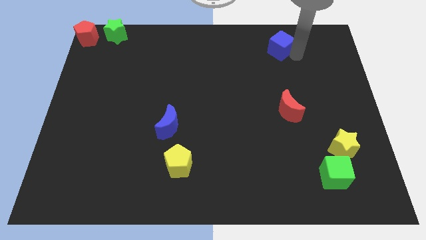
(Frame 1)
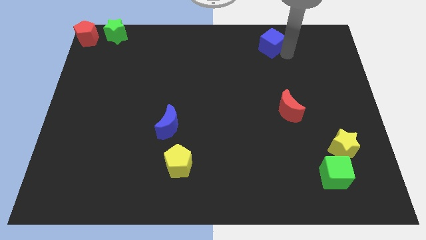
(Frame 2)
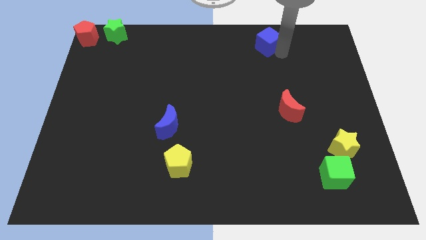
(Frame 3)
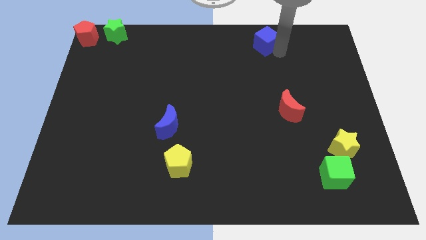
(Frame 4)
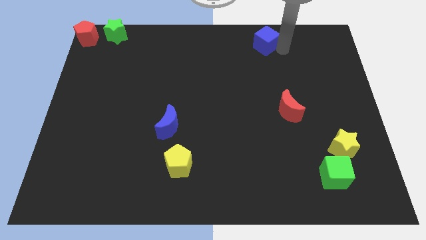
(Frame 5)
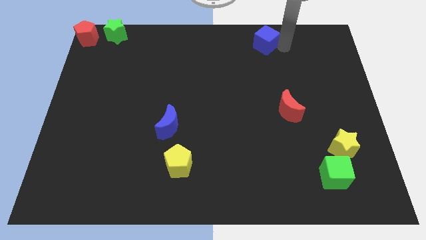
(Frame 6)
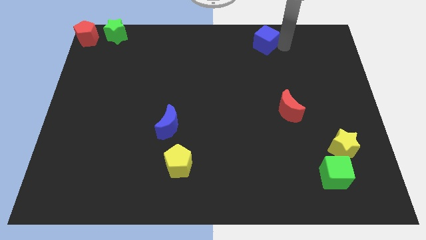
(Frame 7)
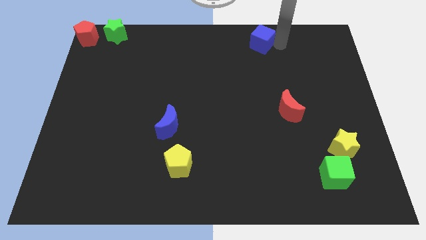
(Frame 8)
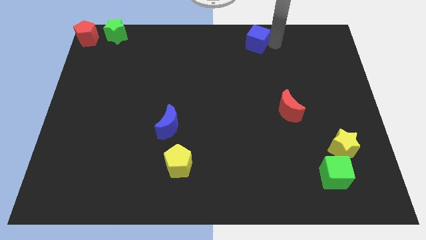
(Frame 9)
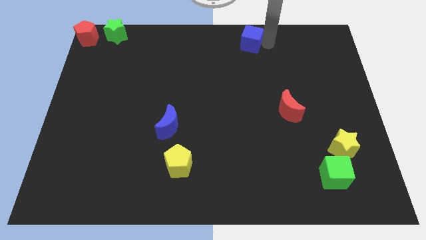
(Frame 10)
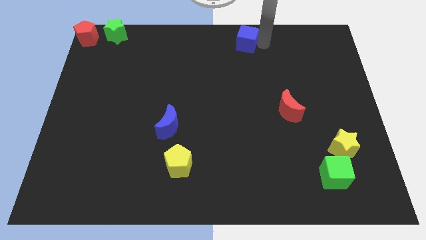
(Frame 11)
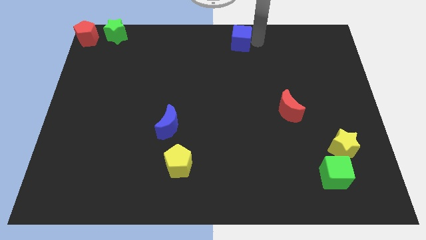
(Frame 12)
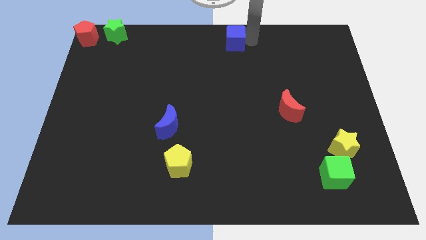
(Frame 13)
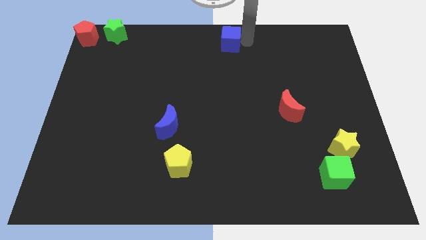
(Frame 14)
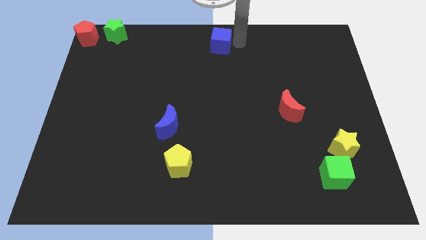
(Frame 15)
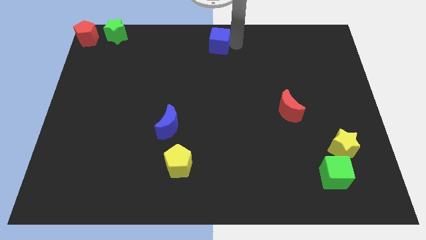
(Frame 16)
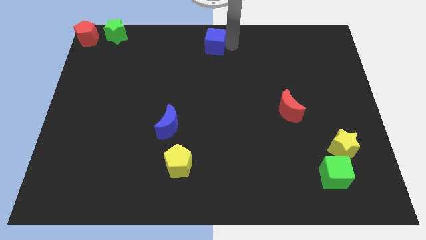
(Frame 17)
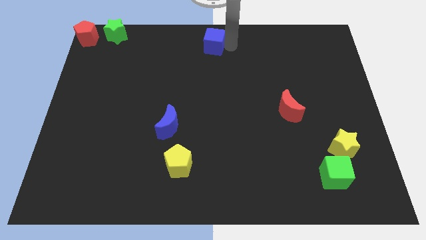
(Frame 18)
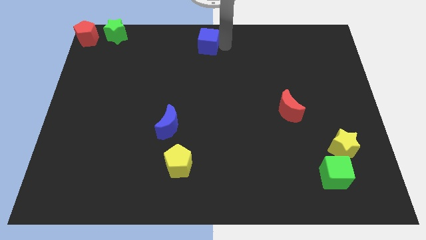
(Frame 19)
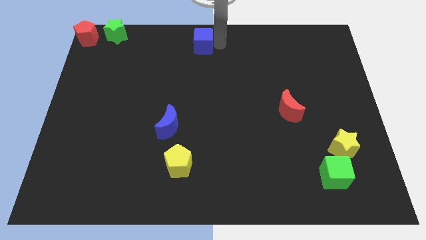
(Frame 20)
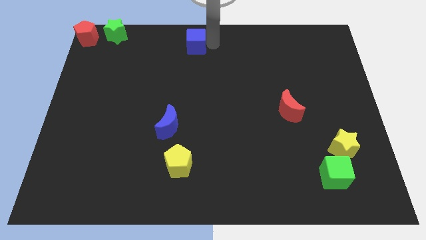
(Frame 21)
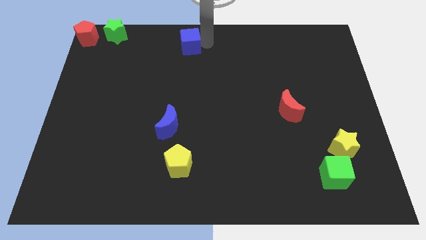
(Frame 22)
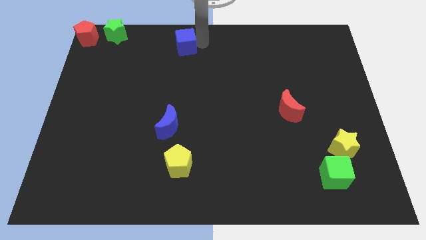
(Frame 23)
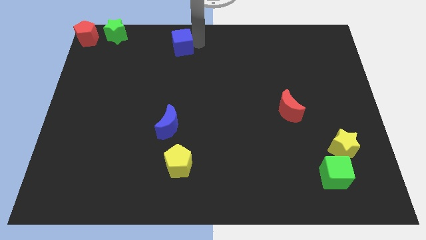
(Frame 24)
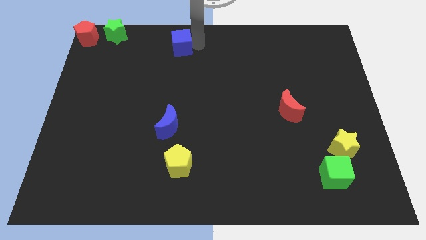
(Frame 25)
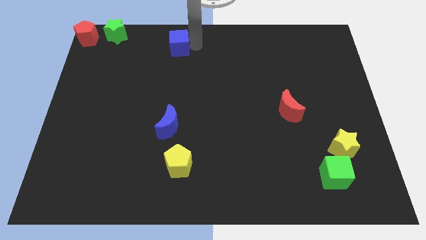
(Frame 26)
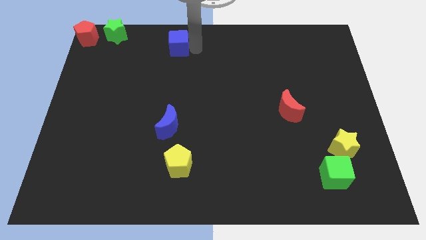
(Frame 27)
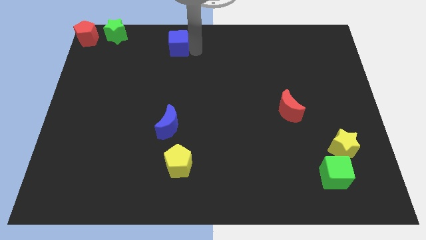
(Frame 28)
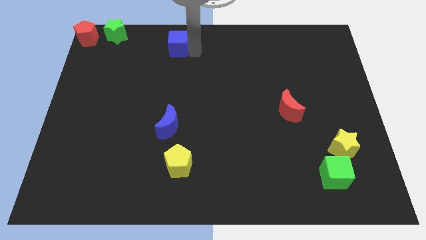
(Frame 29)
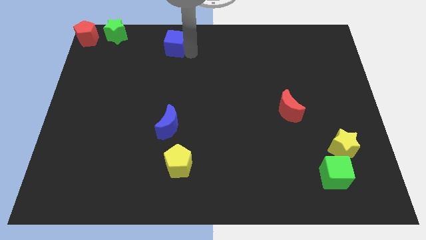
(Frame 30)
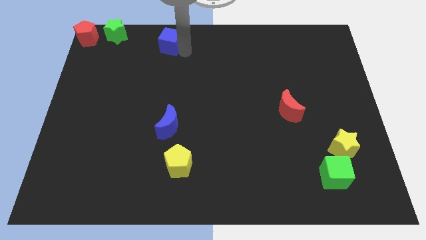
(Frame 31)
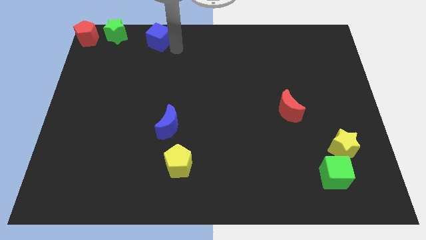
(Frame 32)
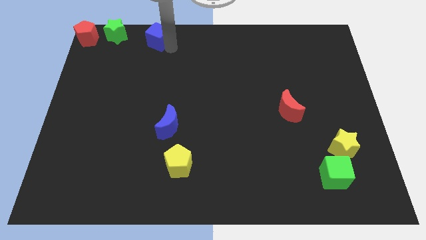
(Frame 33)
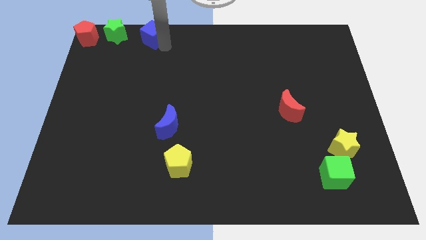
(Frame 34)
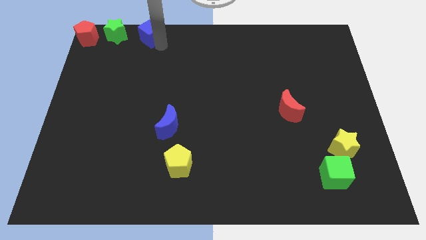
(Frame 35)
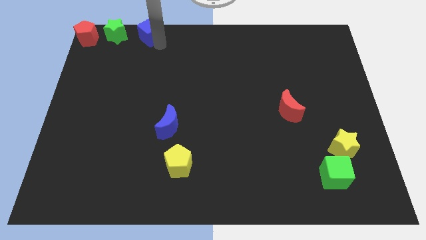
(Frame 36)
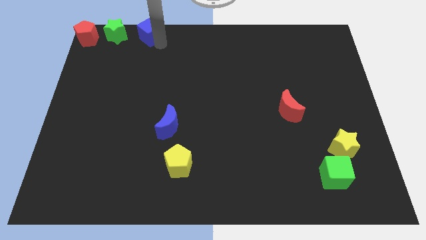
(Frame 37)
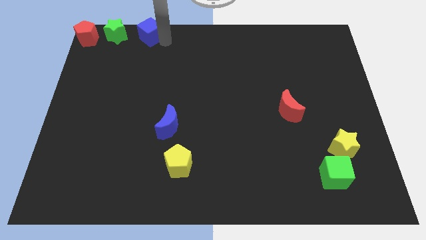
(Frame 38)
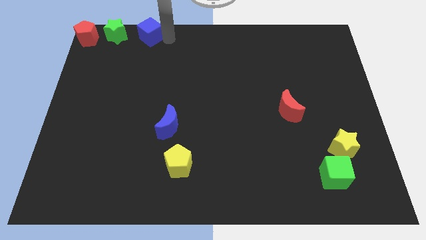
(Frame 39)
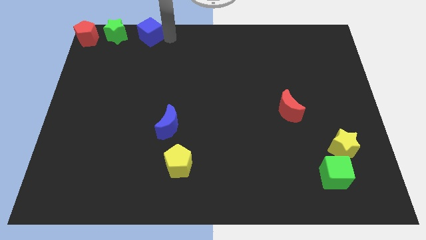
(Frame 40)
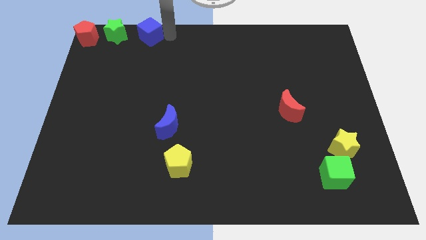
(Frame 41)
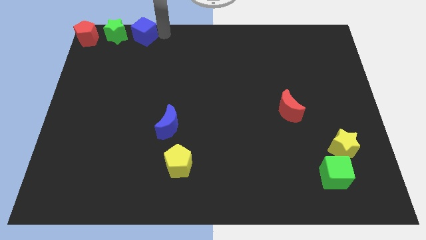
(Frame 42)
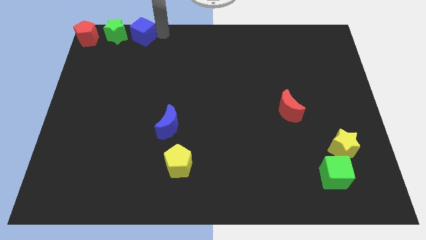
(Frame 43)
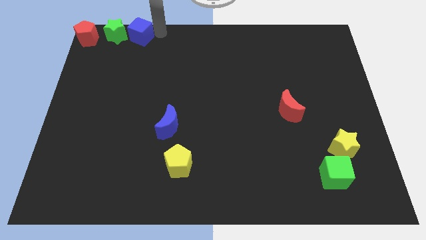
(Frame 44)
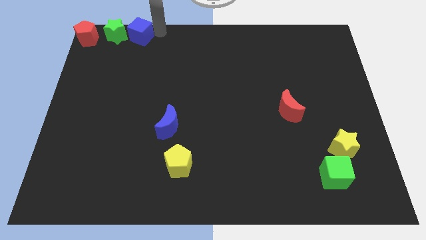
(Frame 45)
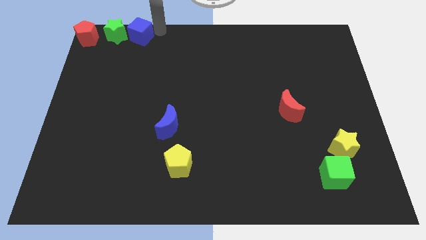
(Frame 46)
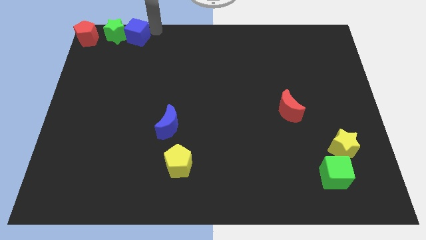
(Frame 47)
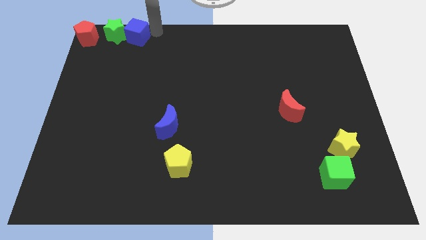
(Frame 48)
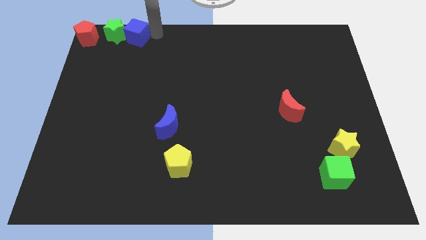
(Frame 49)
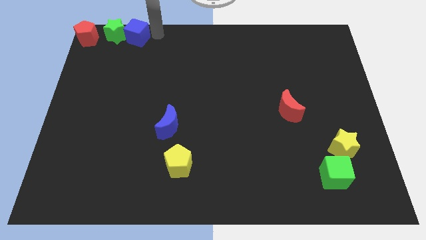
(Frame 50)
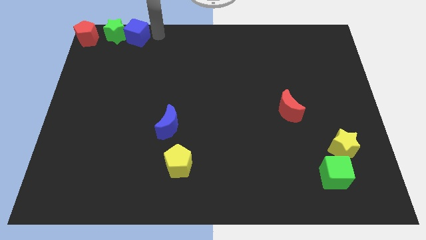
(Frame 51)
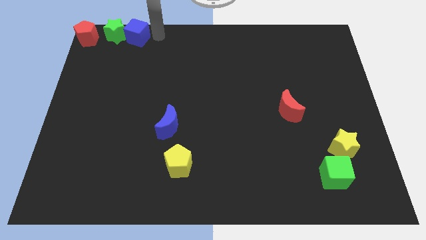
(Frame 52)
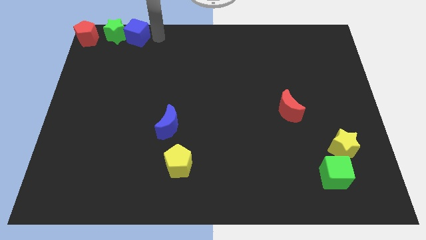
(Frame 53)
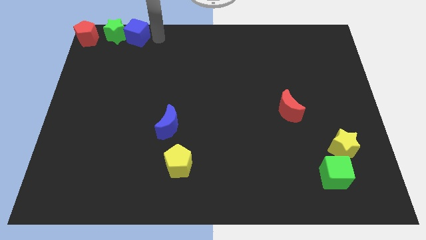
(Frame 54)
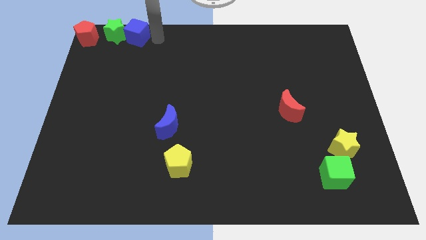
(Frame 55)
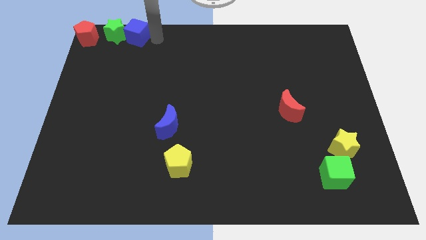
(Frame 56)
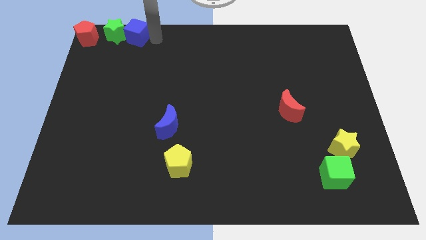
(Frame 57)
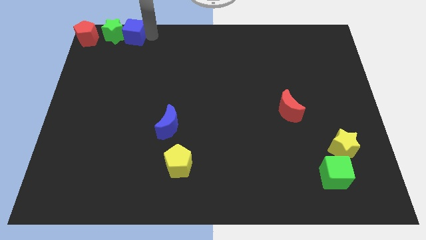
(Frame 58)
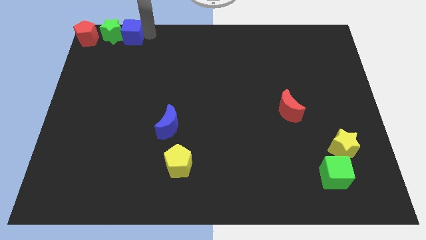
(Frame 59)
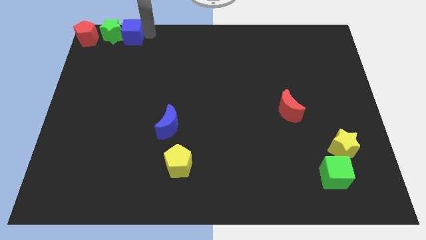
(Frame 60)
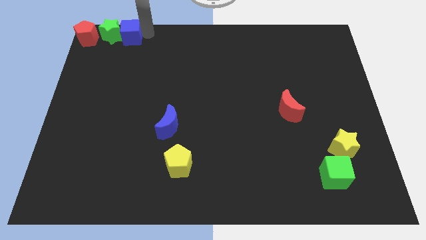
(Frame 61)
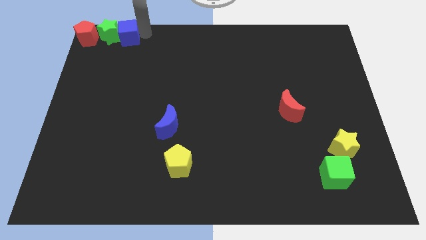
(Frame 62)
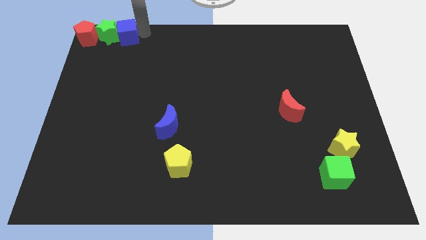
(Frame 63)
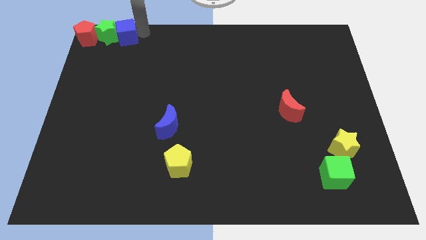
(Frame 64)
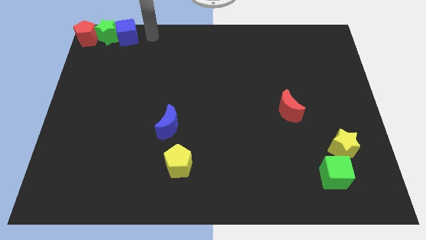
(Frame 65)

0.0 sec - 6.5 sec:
make a horizontal line at the top left of the board

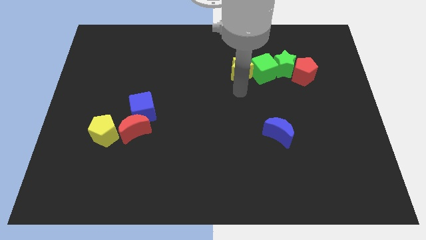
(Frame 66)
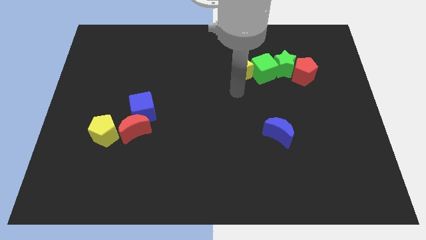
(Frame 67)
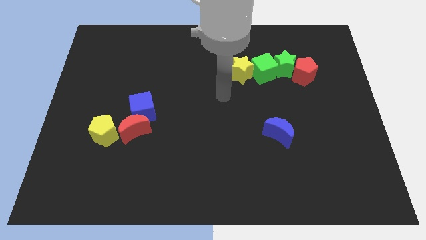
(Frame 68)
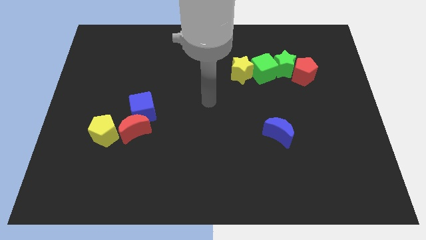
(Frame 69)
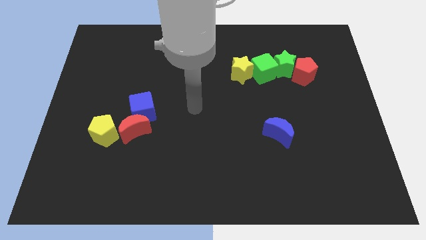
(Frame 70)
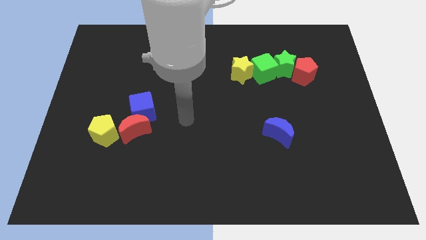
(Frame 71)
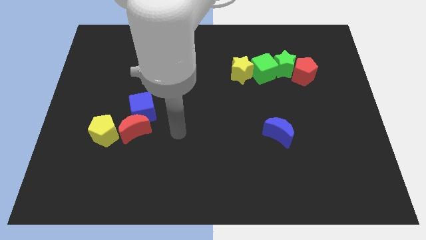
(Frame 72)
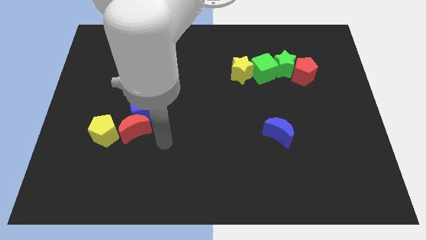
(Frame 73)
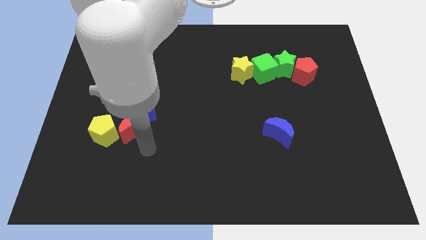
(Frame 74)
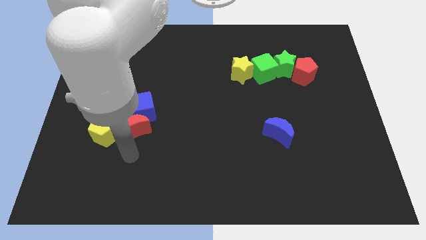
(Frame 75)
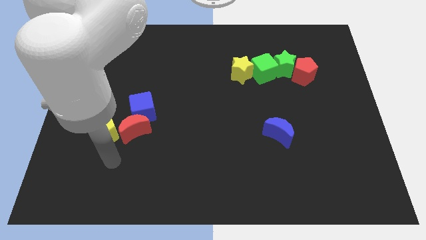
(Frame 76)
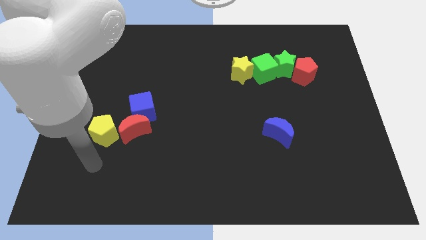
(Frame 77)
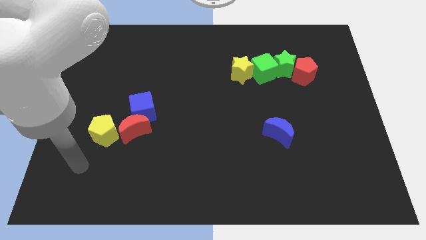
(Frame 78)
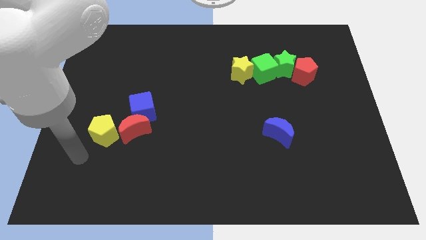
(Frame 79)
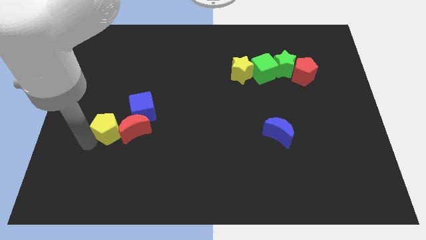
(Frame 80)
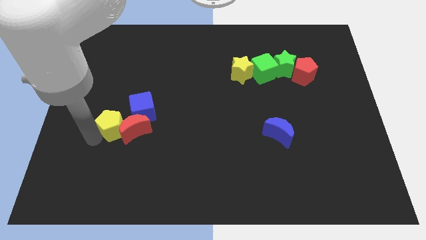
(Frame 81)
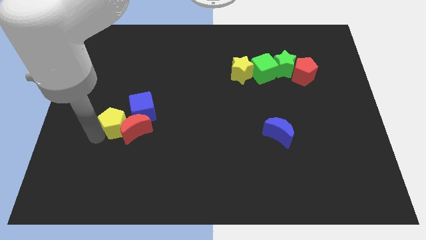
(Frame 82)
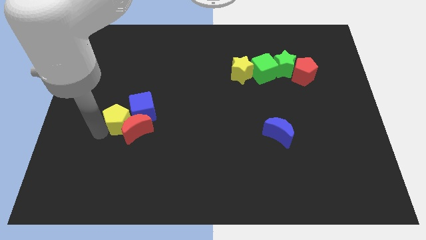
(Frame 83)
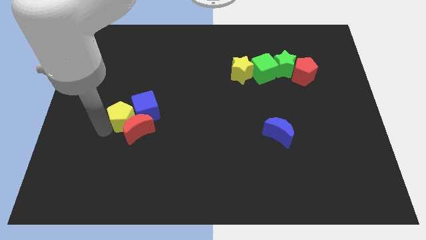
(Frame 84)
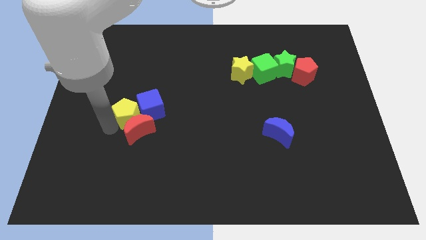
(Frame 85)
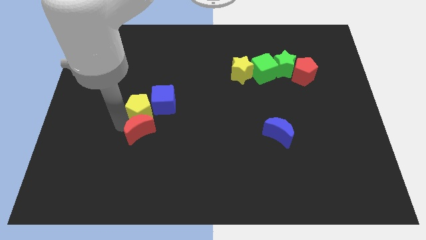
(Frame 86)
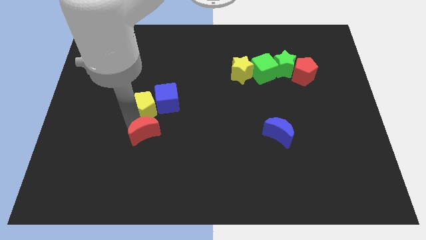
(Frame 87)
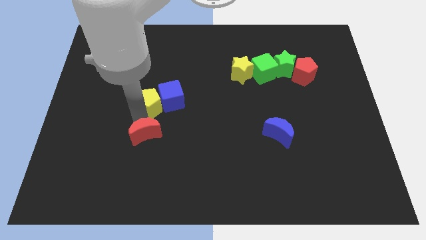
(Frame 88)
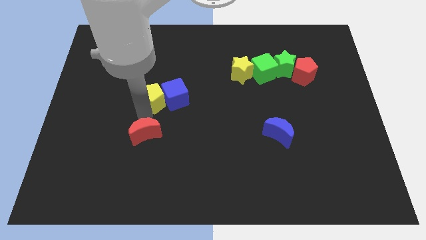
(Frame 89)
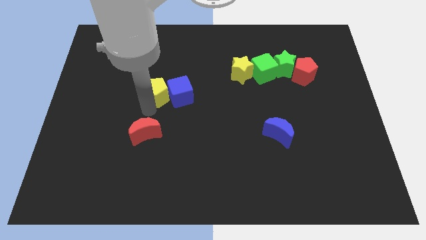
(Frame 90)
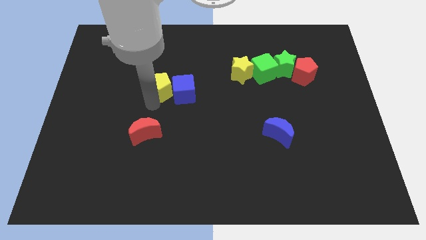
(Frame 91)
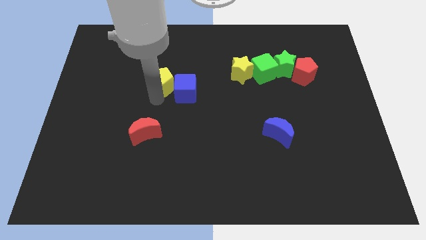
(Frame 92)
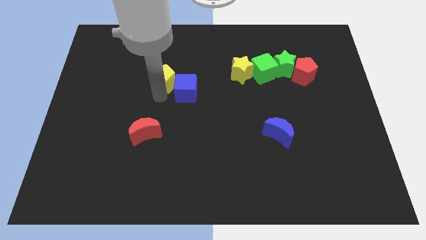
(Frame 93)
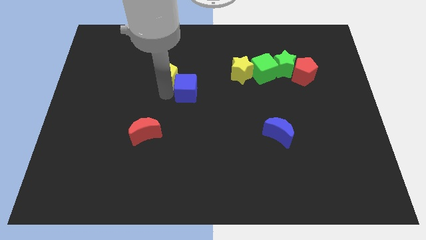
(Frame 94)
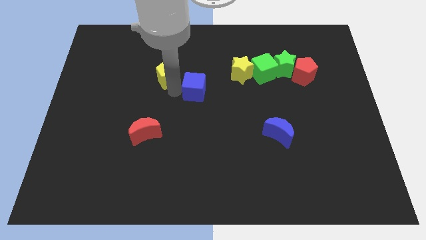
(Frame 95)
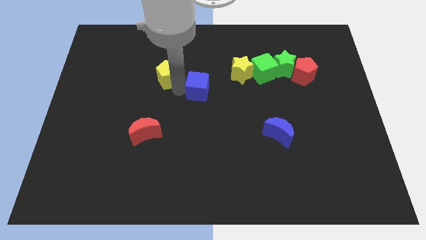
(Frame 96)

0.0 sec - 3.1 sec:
push the yellow pentagon to the left of the blue cube
